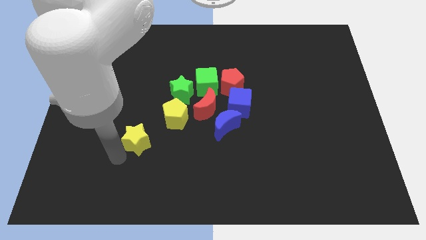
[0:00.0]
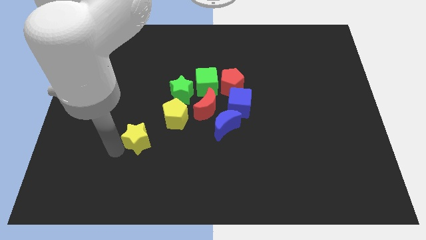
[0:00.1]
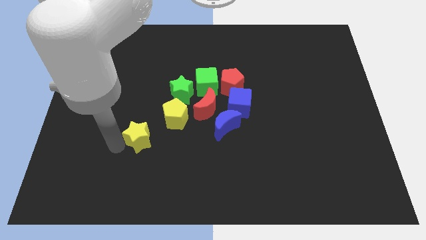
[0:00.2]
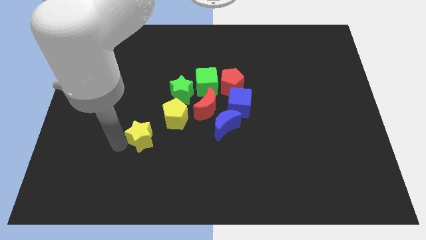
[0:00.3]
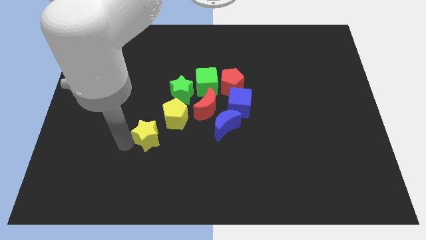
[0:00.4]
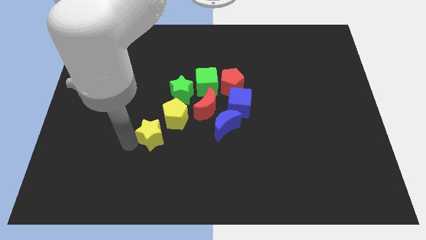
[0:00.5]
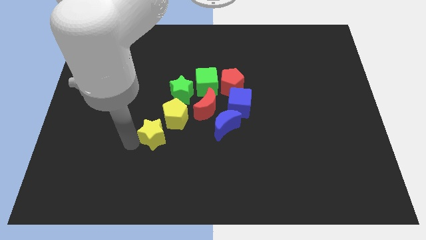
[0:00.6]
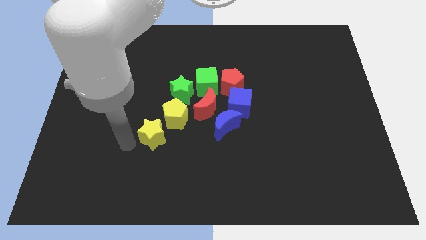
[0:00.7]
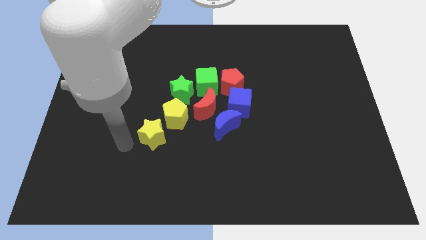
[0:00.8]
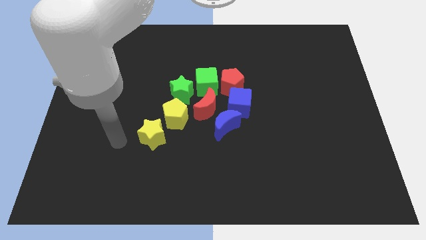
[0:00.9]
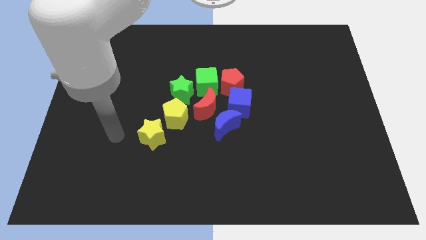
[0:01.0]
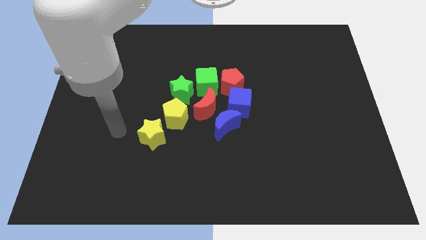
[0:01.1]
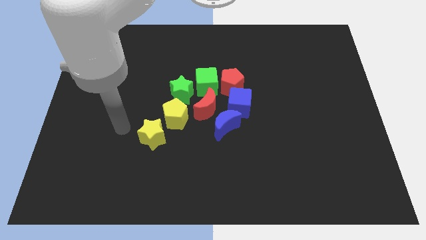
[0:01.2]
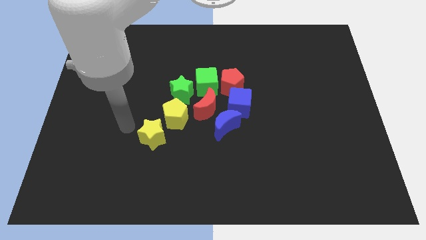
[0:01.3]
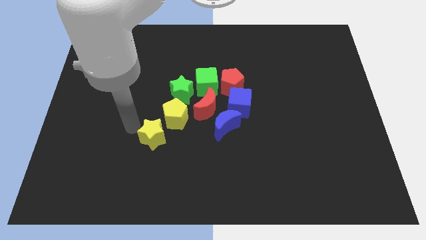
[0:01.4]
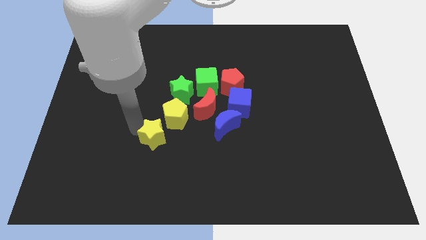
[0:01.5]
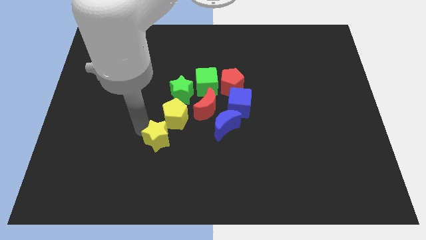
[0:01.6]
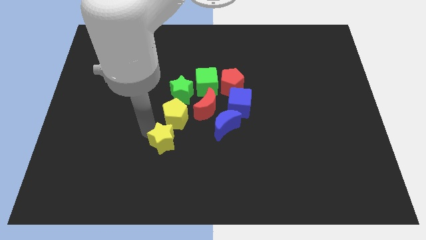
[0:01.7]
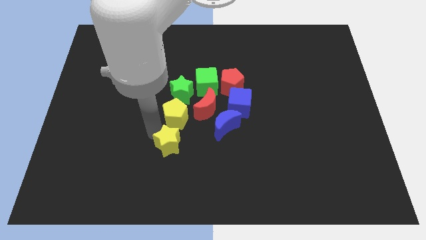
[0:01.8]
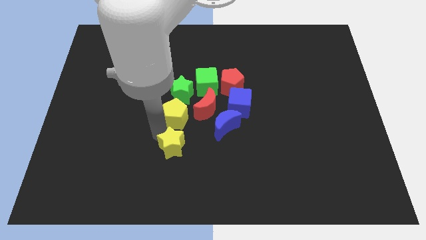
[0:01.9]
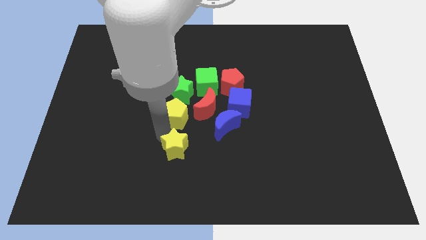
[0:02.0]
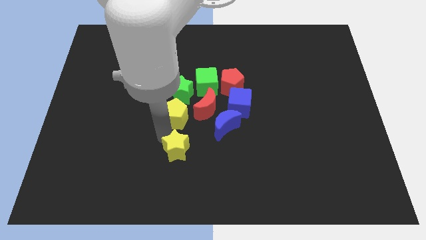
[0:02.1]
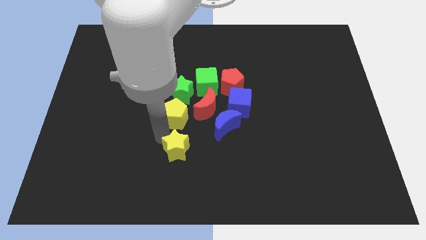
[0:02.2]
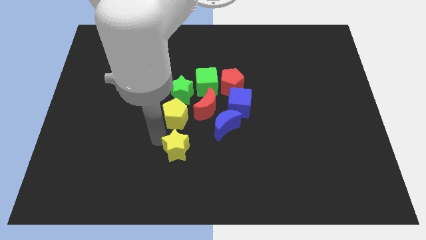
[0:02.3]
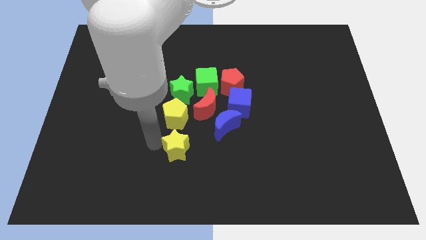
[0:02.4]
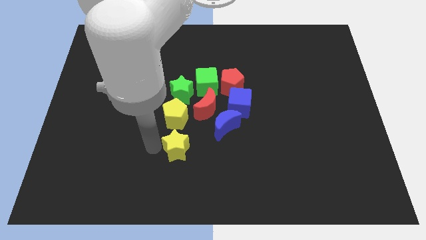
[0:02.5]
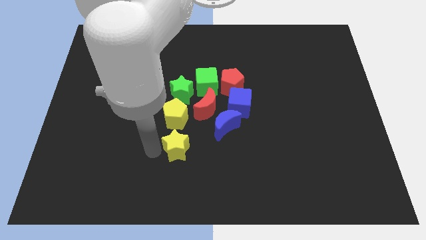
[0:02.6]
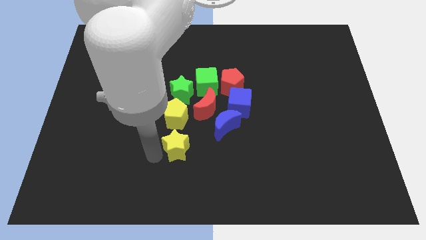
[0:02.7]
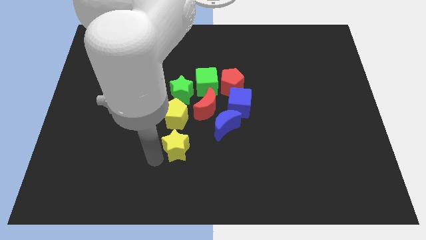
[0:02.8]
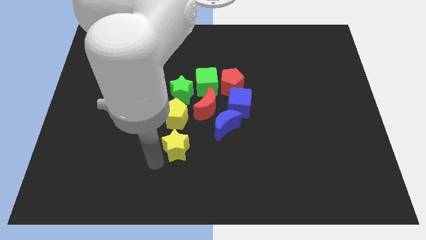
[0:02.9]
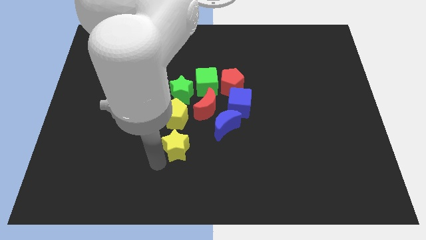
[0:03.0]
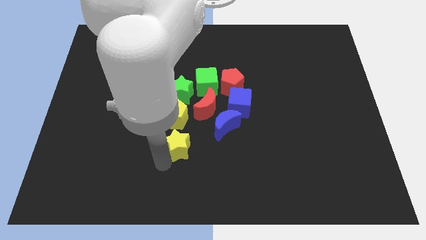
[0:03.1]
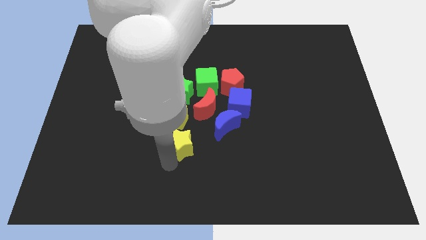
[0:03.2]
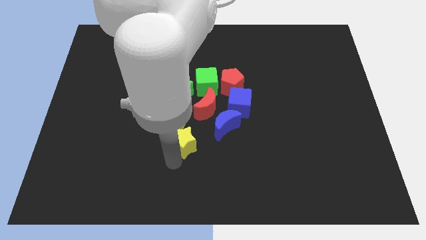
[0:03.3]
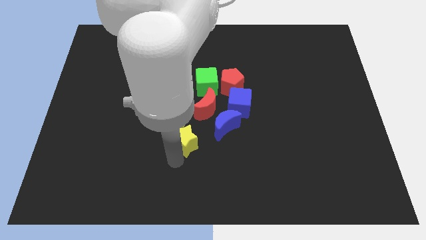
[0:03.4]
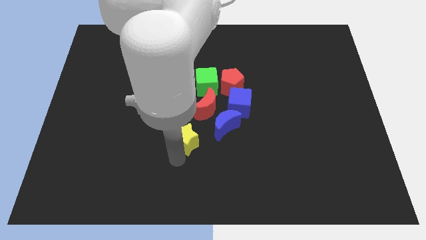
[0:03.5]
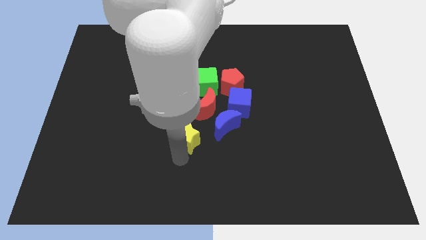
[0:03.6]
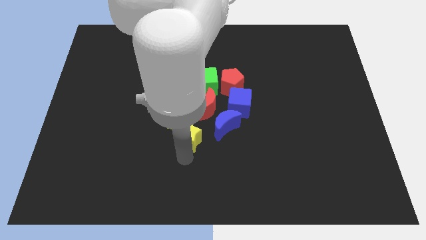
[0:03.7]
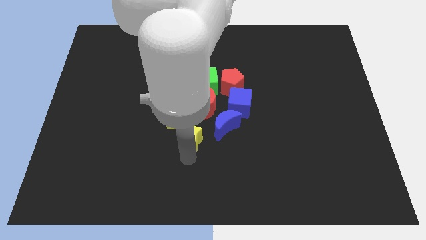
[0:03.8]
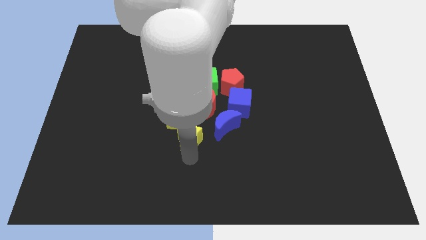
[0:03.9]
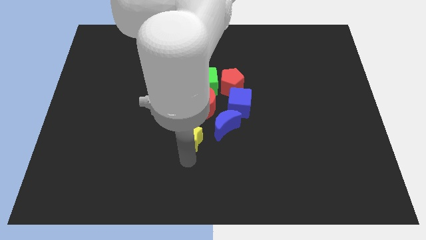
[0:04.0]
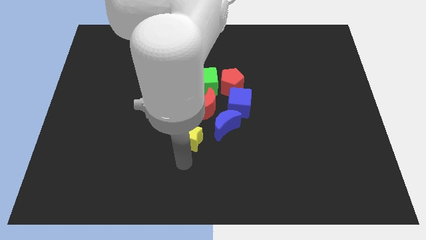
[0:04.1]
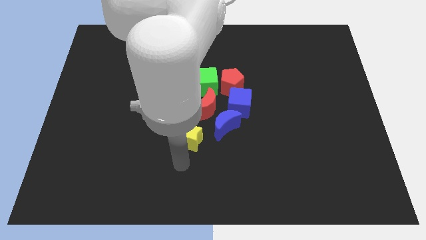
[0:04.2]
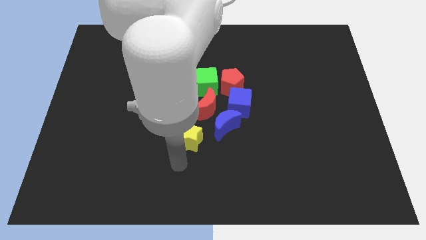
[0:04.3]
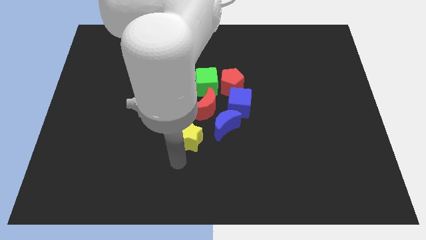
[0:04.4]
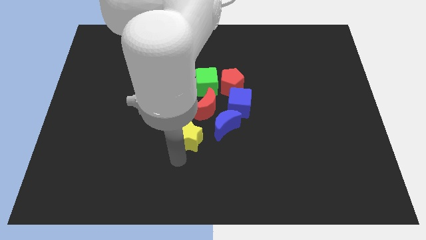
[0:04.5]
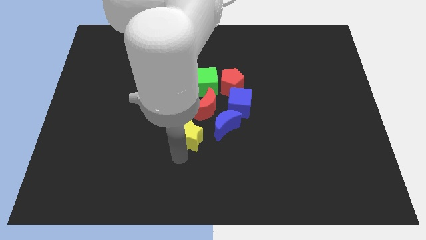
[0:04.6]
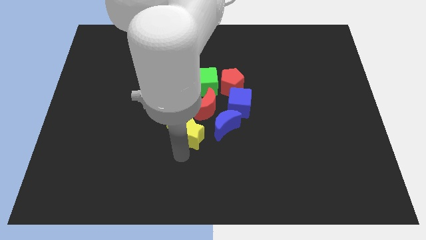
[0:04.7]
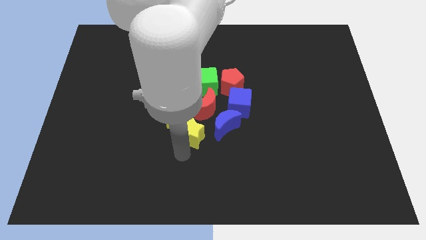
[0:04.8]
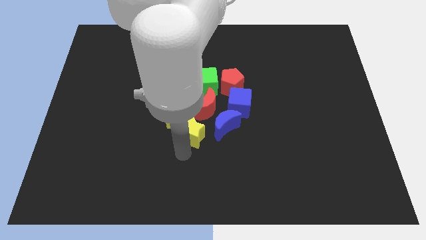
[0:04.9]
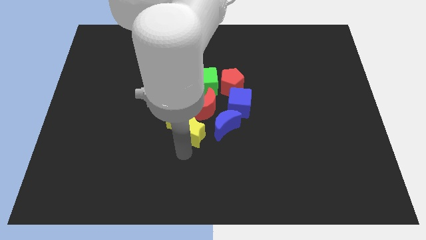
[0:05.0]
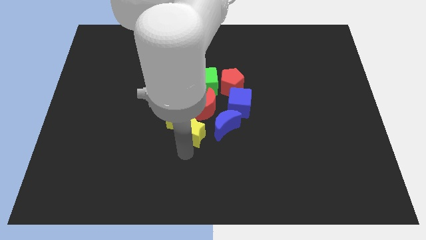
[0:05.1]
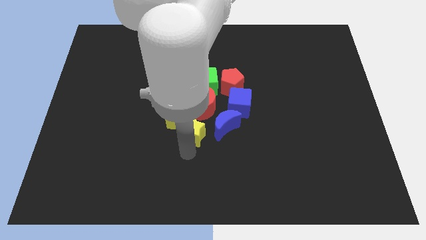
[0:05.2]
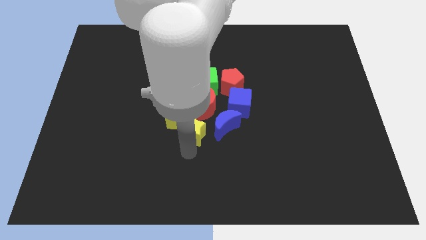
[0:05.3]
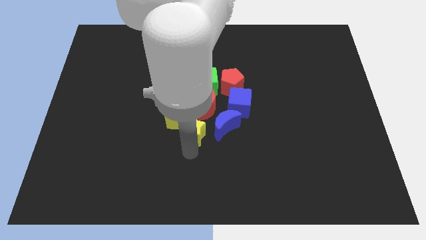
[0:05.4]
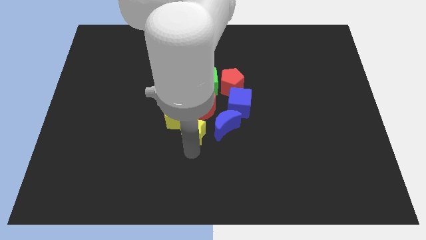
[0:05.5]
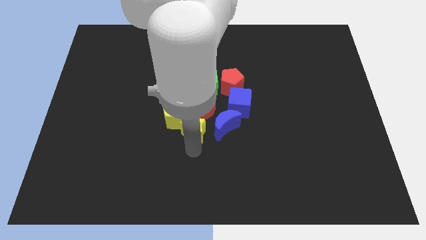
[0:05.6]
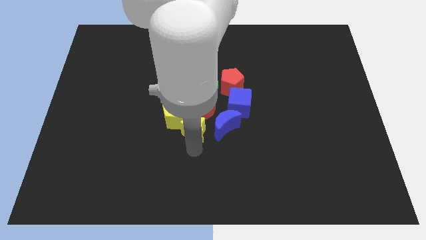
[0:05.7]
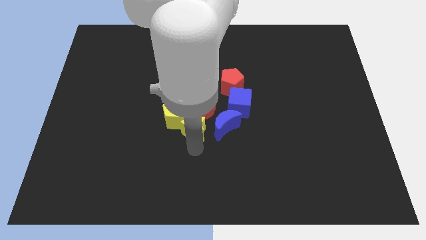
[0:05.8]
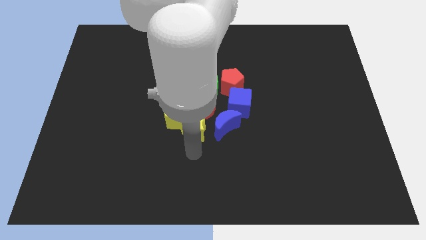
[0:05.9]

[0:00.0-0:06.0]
push the yellow star towards the left of the blue crescent

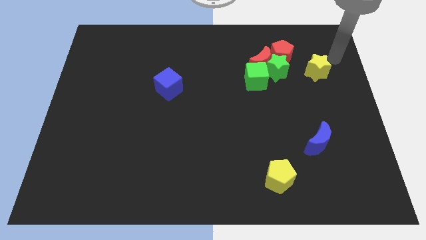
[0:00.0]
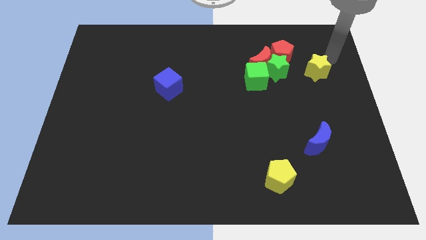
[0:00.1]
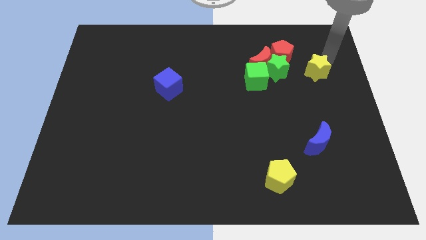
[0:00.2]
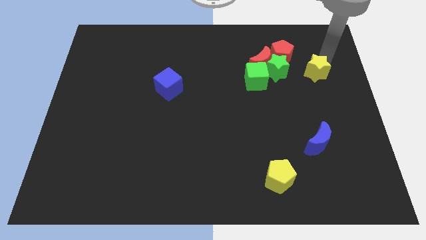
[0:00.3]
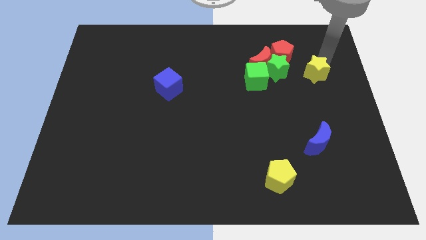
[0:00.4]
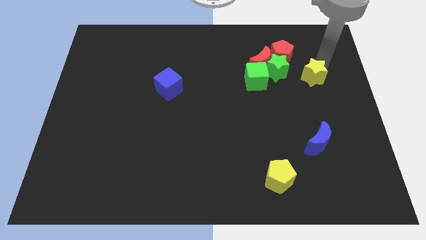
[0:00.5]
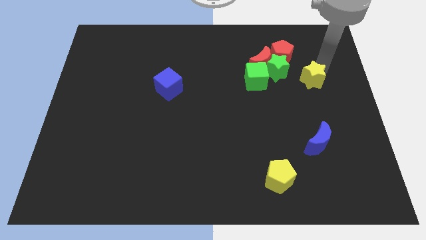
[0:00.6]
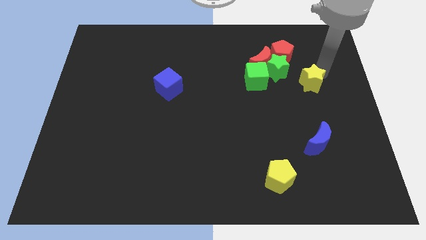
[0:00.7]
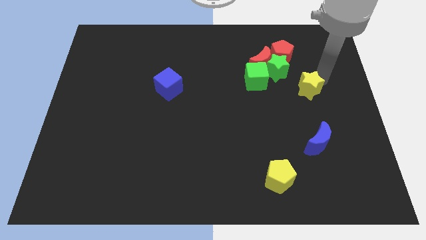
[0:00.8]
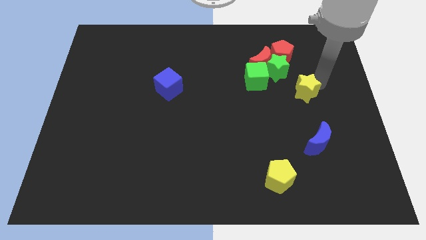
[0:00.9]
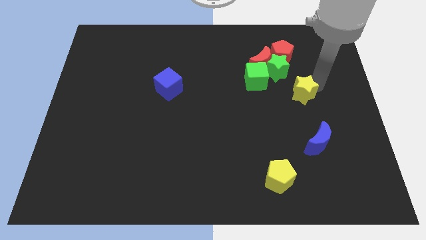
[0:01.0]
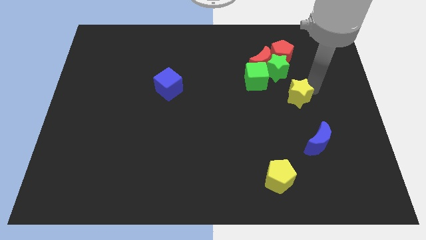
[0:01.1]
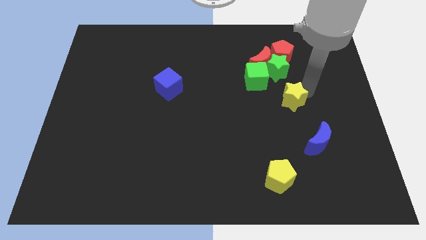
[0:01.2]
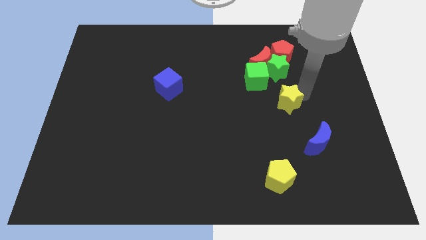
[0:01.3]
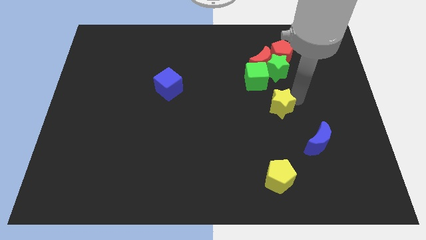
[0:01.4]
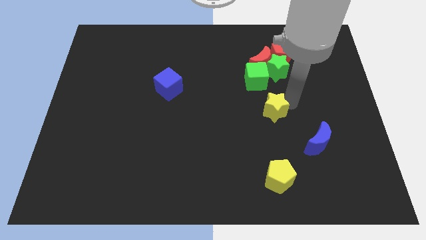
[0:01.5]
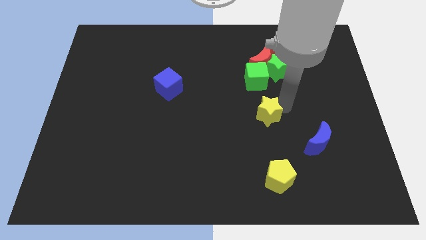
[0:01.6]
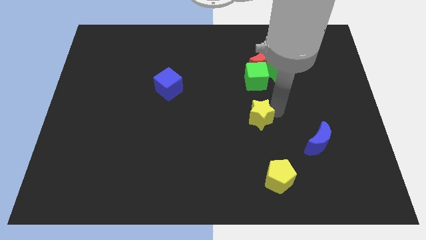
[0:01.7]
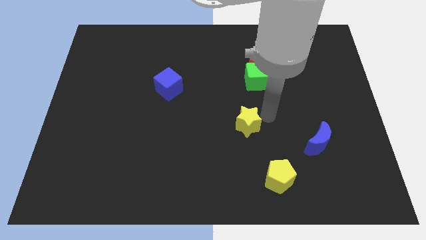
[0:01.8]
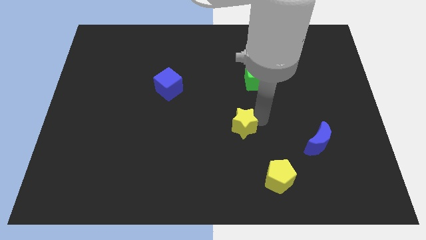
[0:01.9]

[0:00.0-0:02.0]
push yellow star diagonally towards bottom

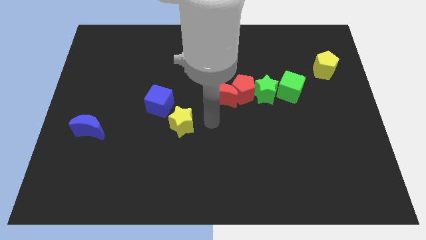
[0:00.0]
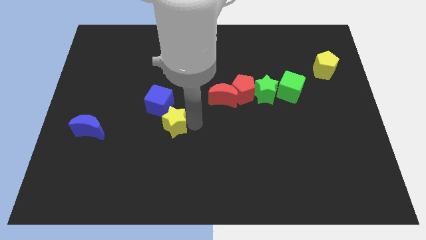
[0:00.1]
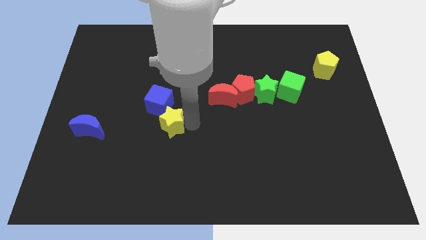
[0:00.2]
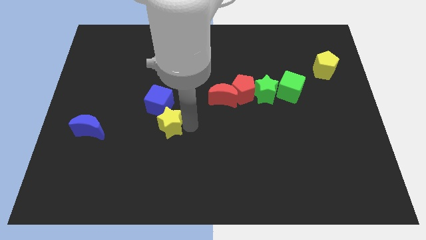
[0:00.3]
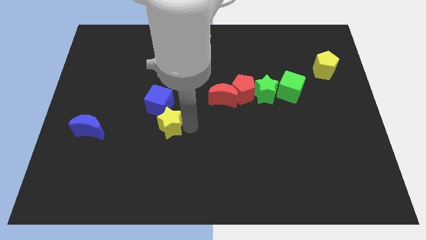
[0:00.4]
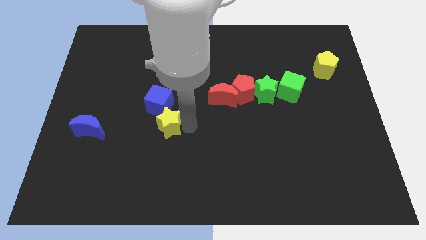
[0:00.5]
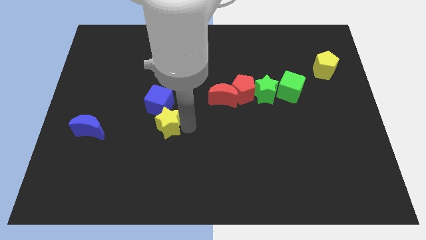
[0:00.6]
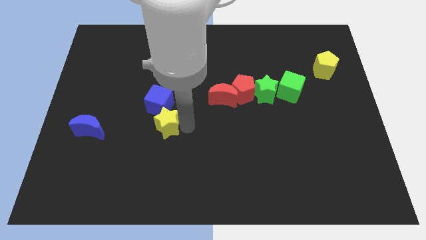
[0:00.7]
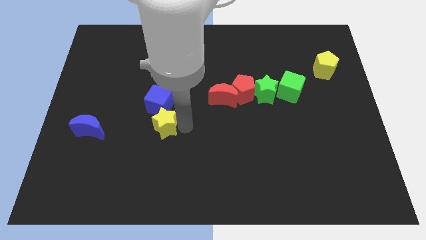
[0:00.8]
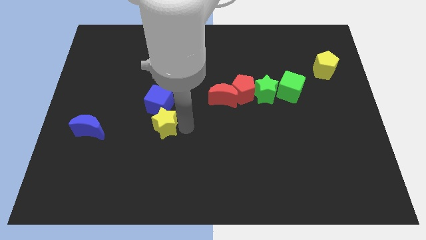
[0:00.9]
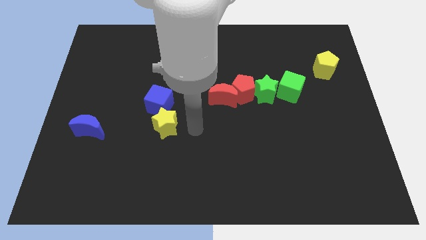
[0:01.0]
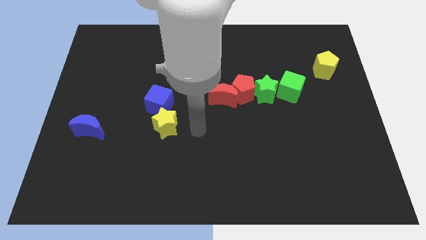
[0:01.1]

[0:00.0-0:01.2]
move the yellow star close to the bottom side of the blue cube
